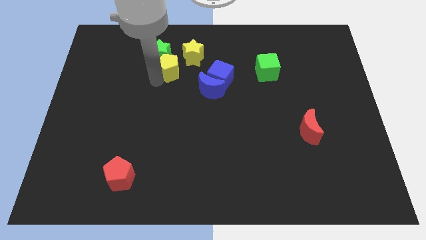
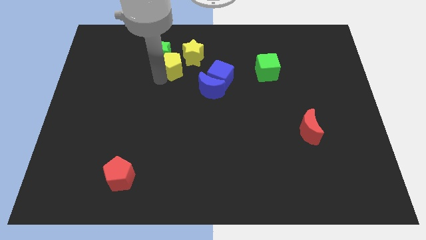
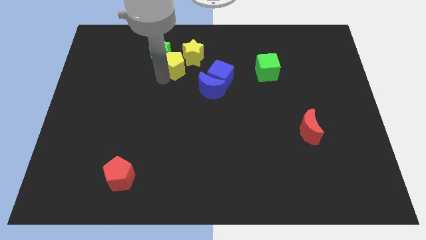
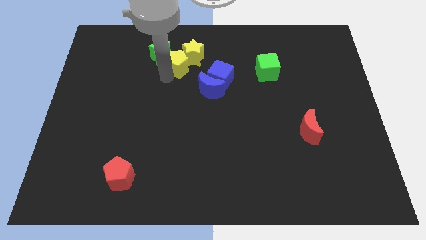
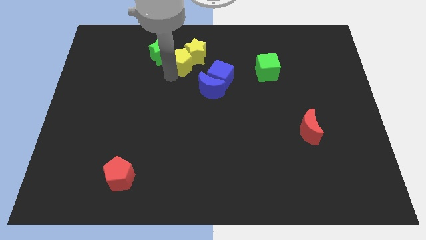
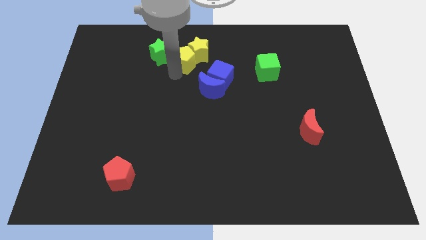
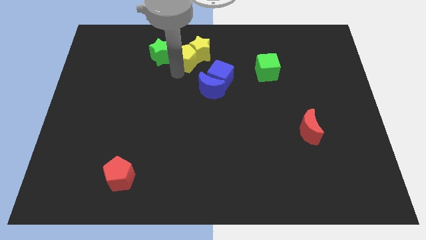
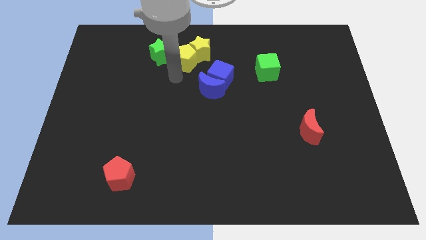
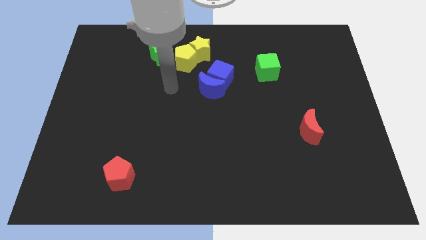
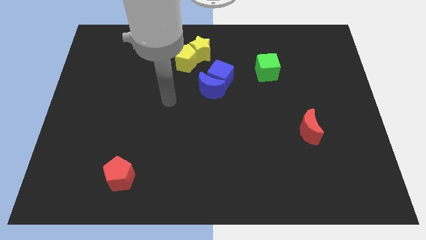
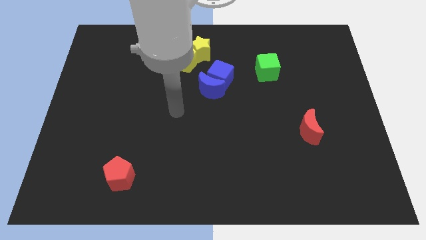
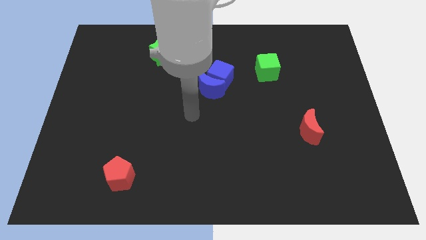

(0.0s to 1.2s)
move the yellow pentagon into the yellow star

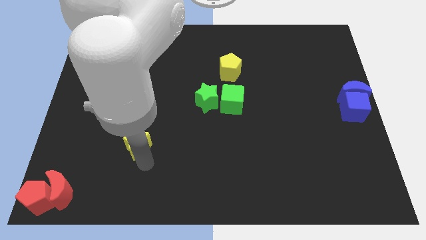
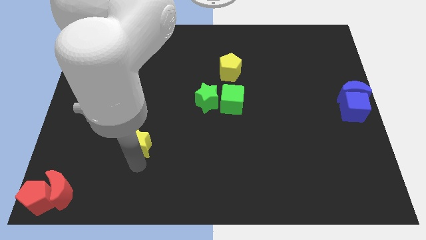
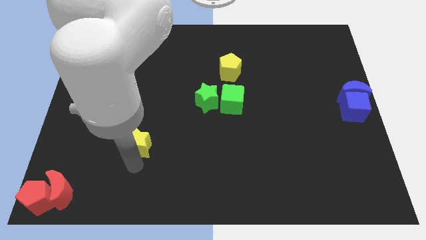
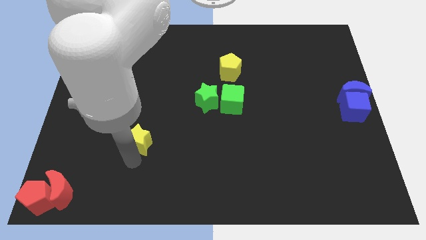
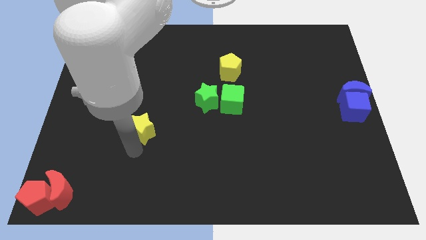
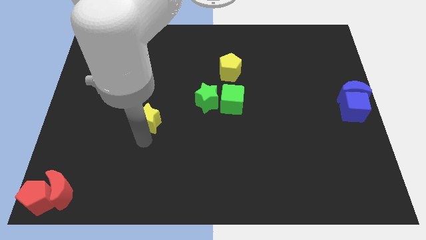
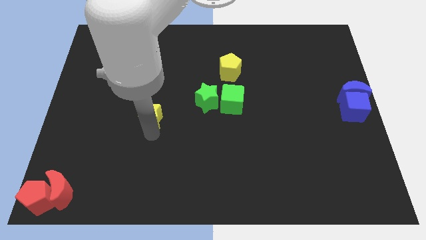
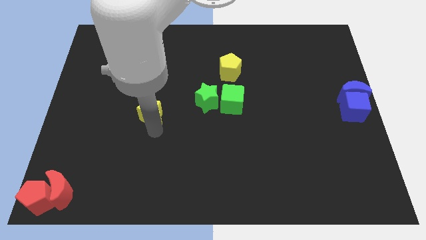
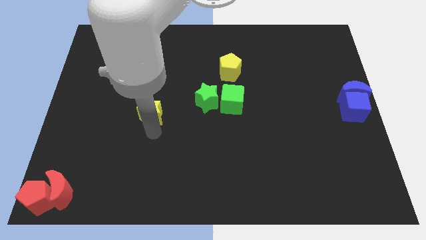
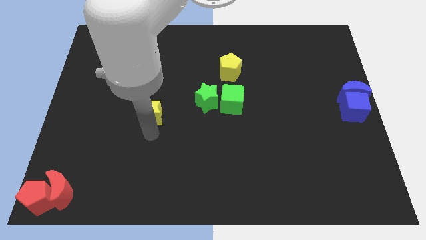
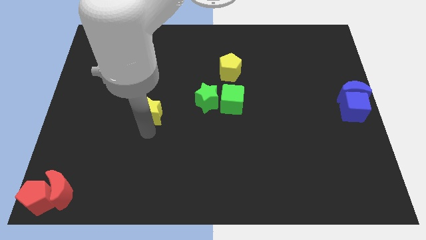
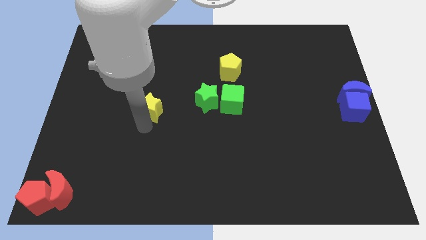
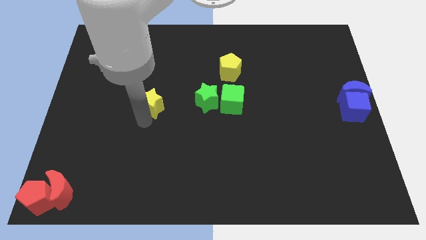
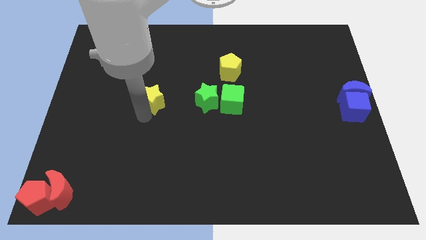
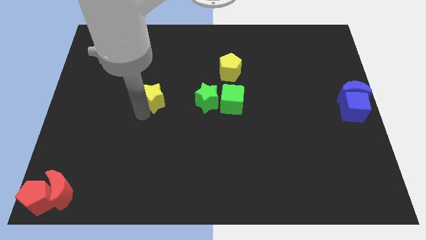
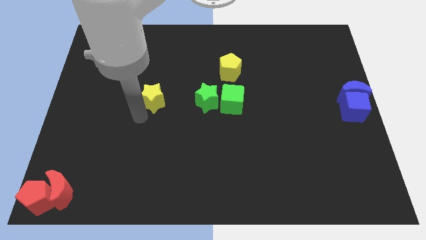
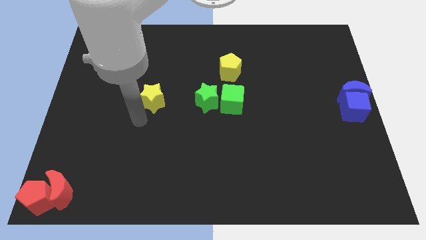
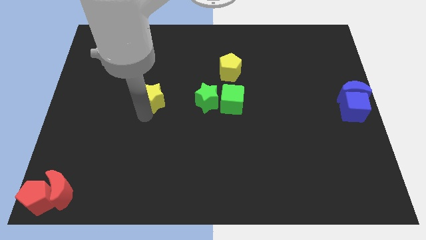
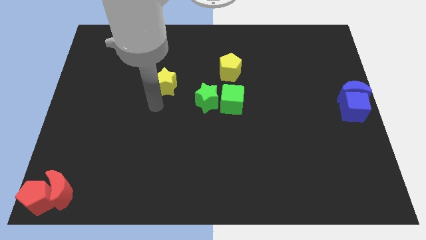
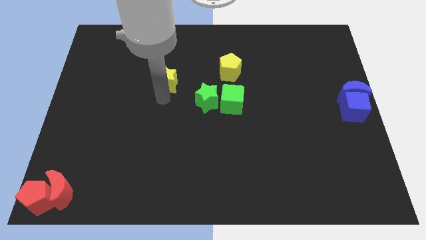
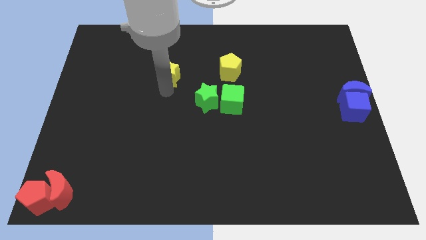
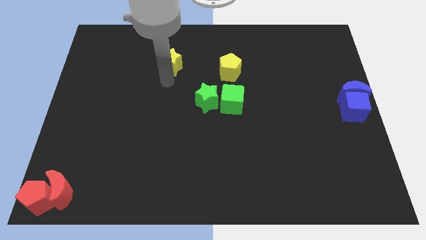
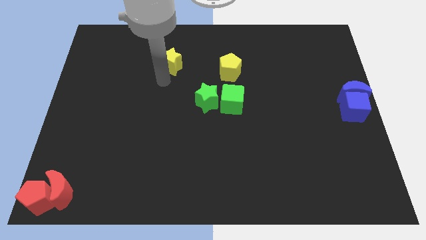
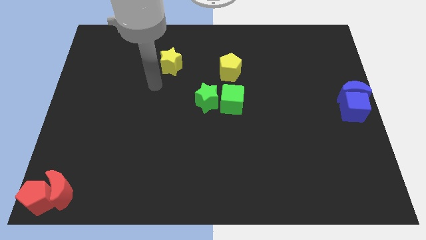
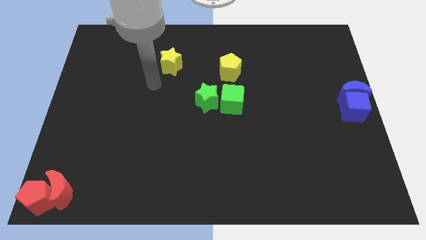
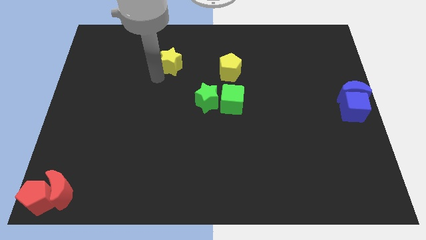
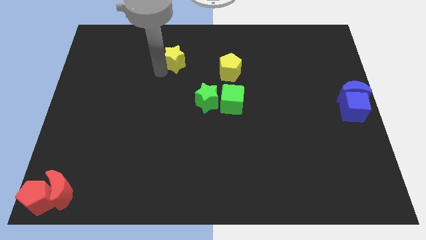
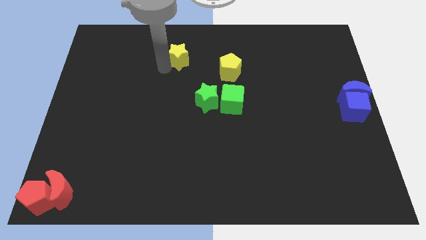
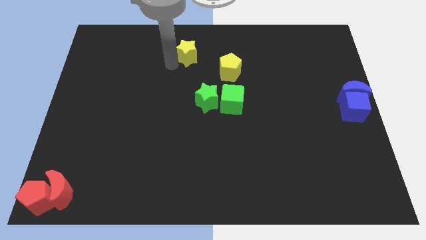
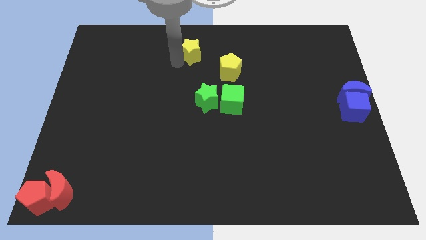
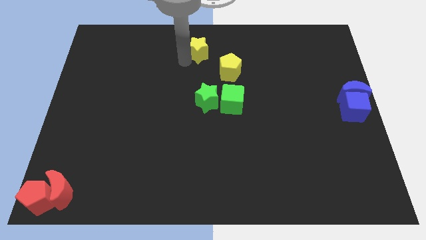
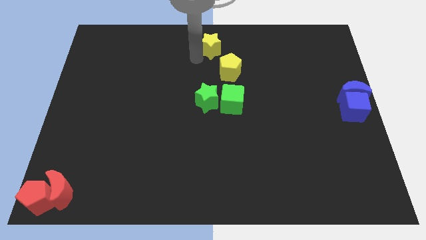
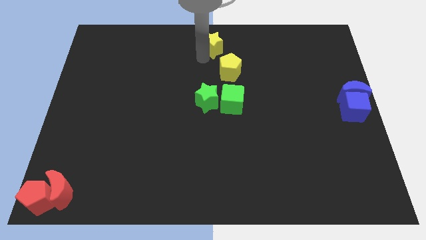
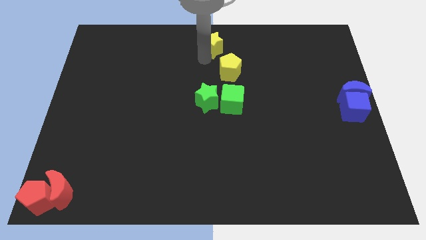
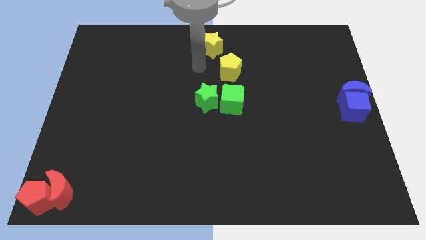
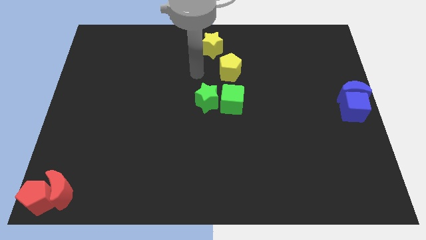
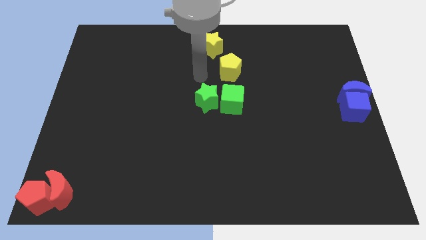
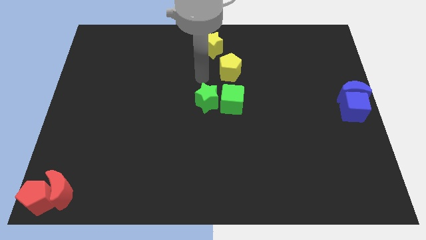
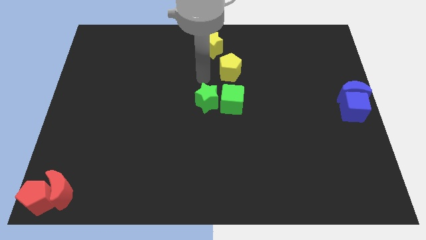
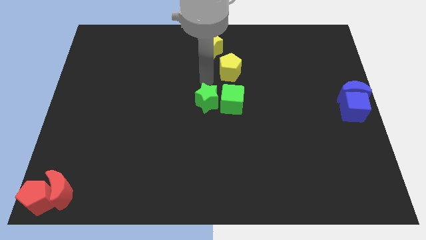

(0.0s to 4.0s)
push the yellow star to the top center of the board

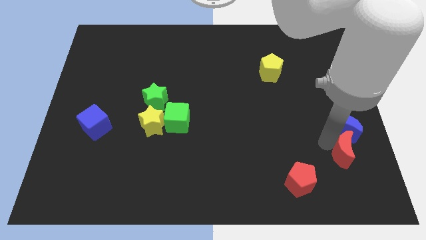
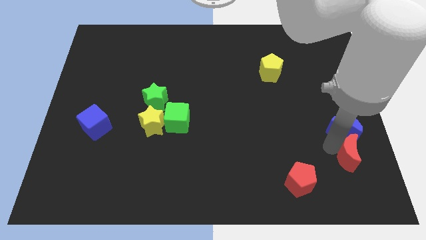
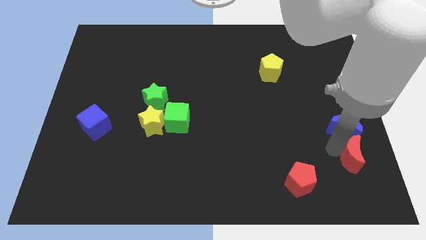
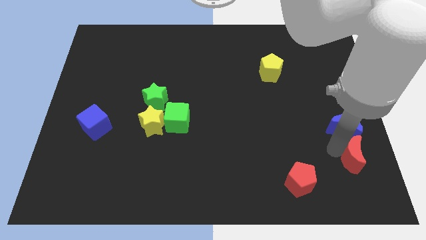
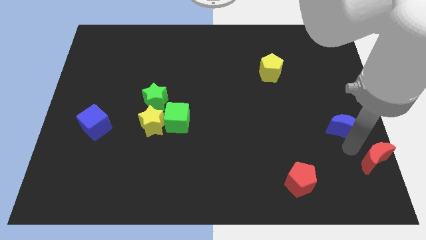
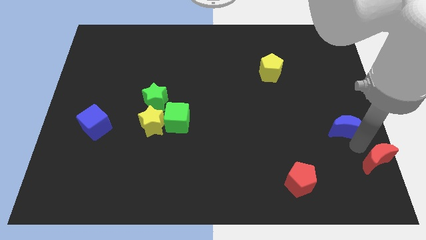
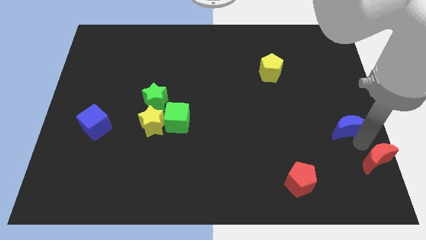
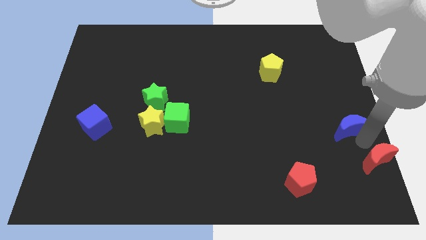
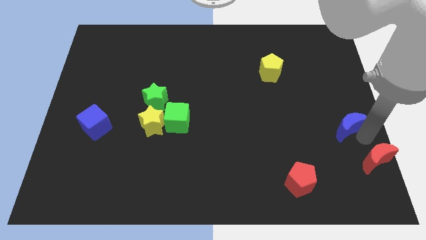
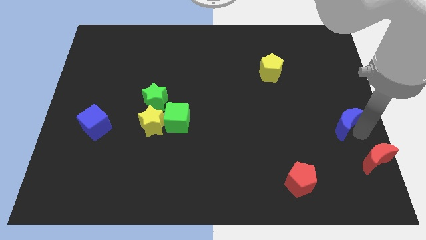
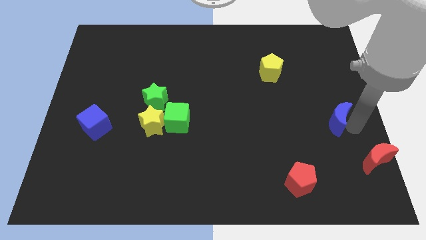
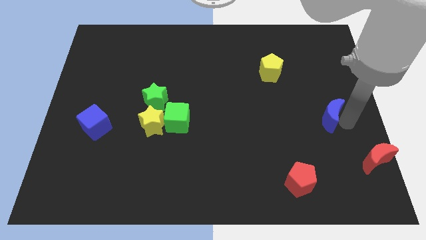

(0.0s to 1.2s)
separate the red moon from the blue moon

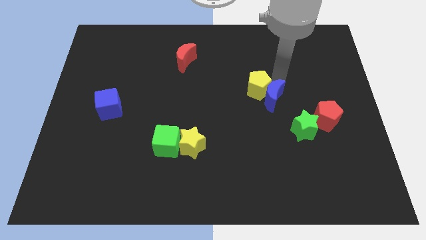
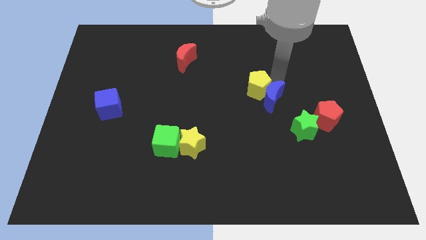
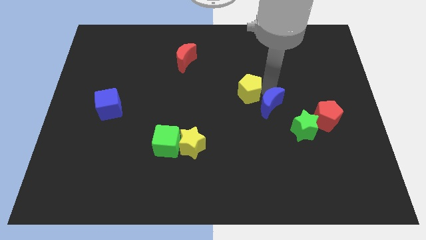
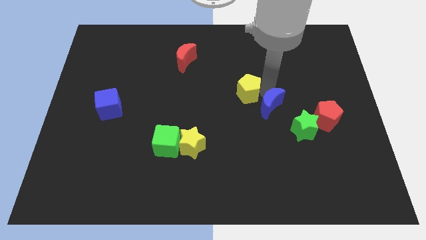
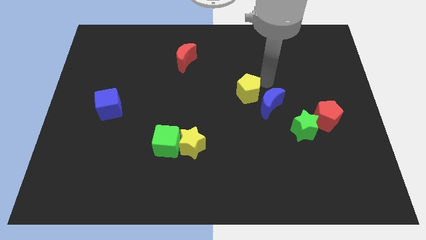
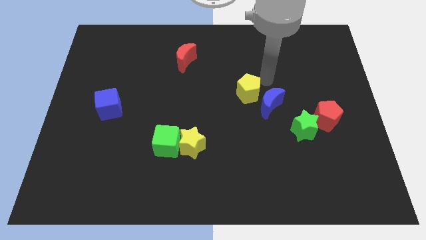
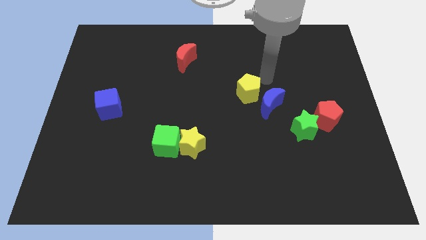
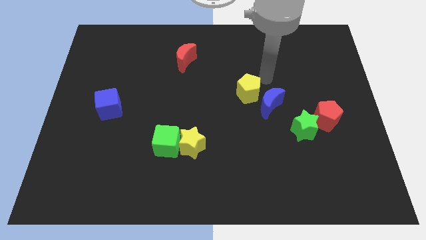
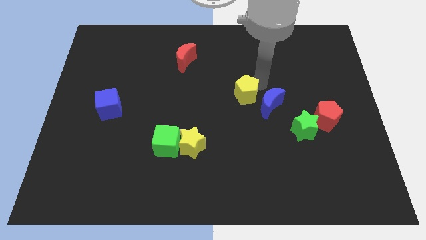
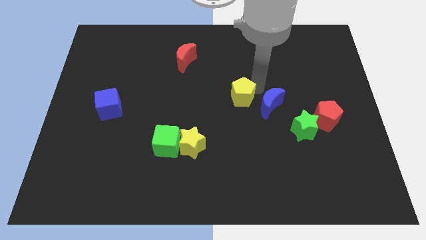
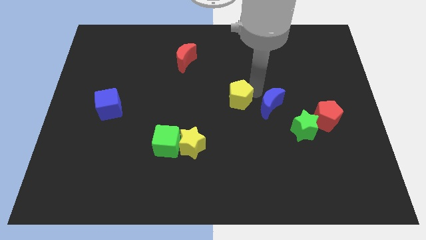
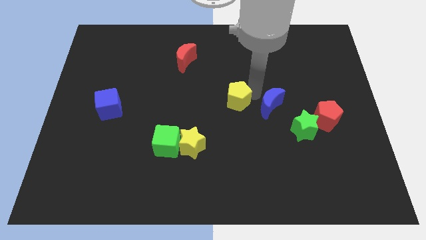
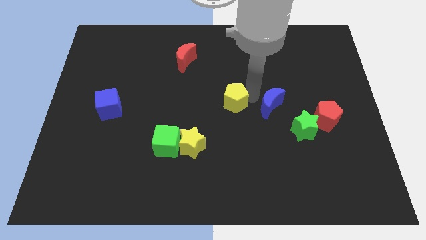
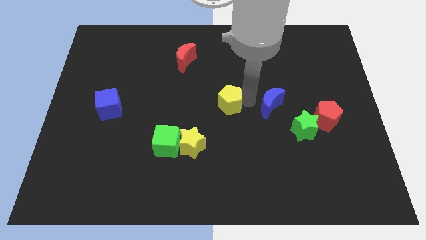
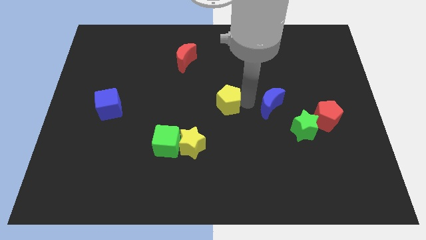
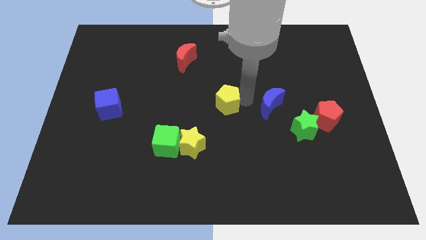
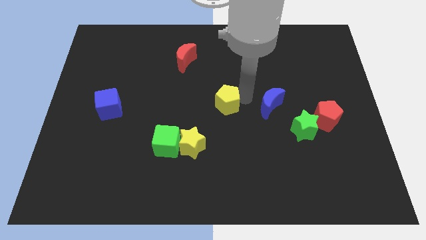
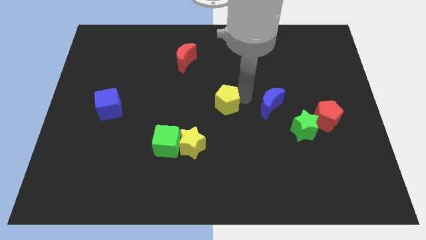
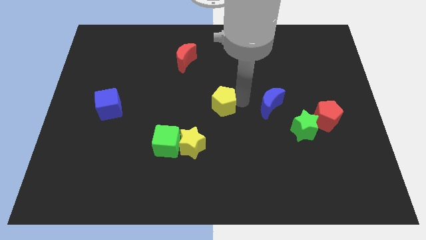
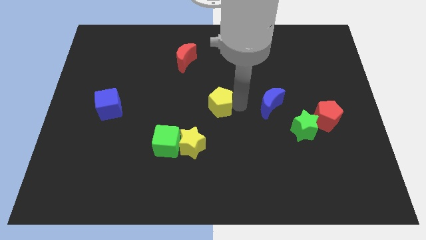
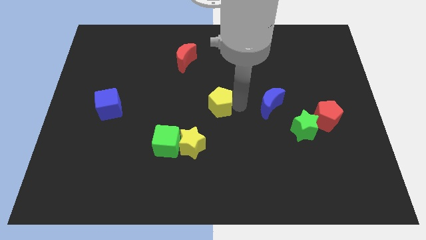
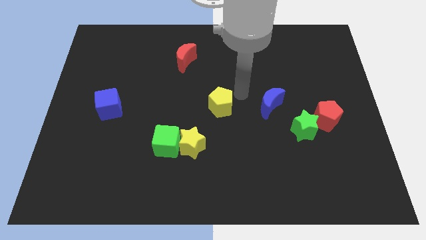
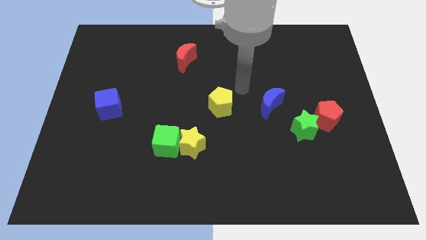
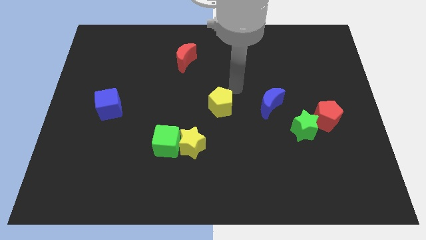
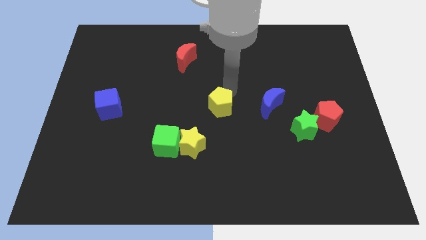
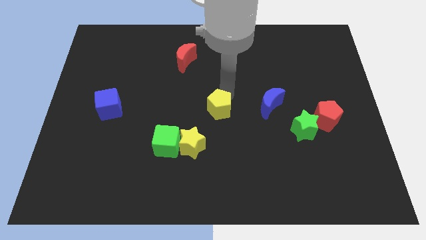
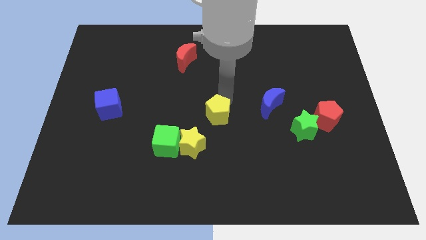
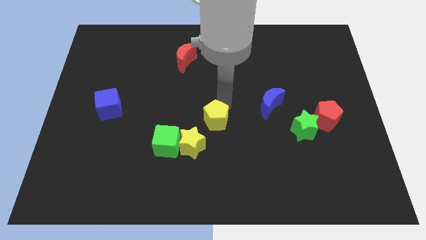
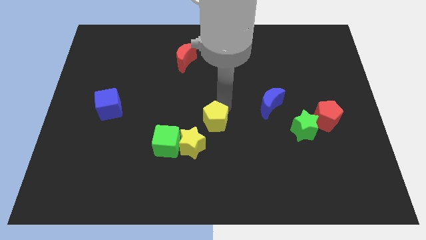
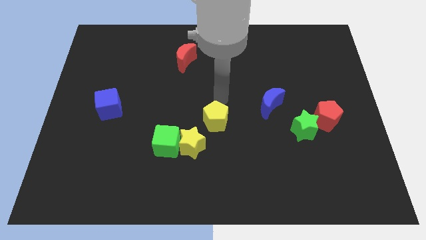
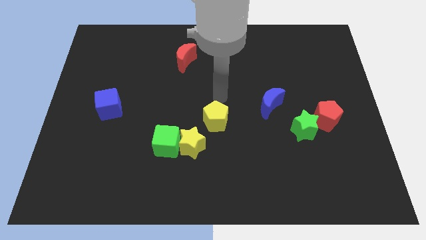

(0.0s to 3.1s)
slide yellow pentagon to the top right of yellow star
